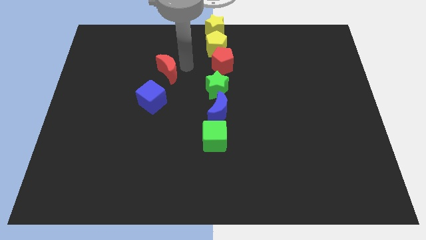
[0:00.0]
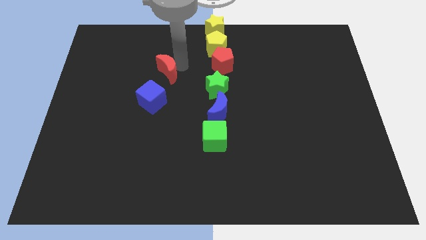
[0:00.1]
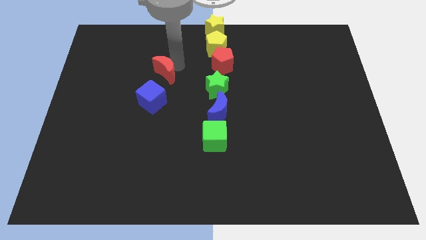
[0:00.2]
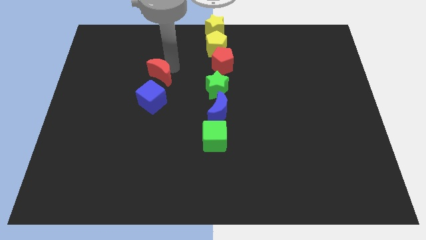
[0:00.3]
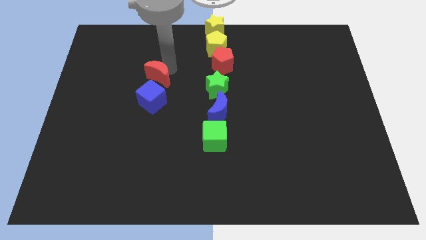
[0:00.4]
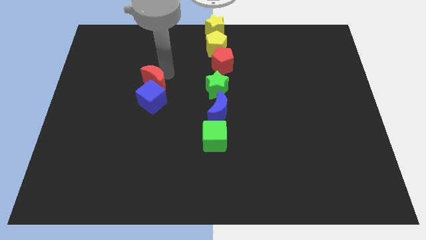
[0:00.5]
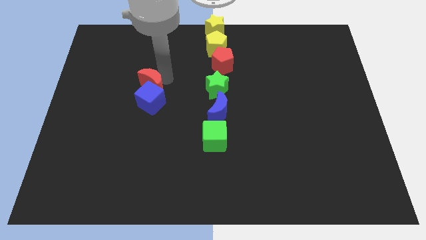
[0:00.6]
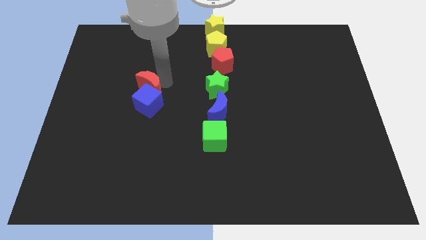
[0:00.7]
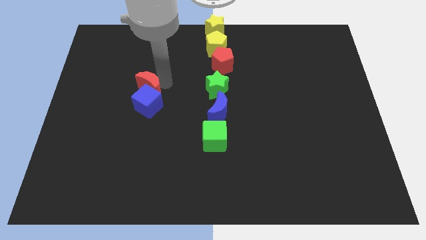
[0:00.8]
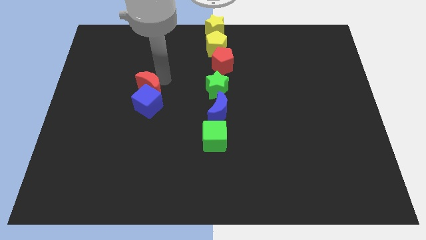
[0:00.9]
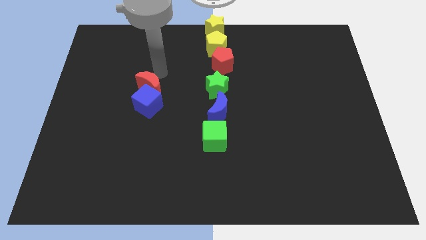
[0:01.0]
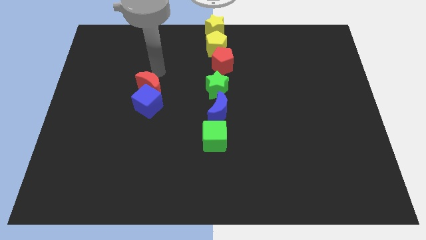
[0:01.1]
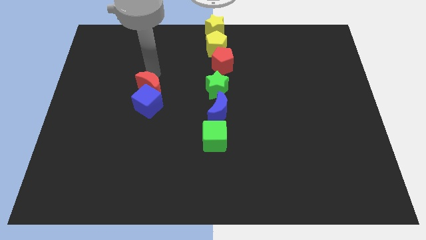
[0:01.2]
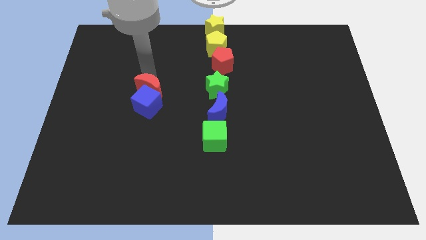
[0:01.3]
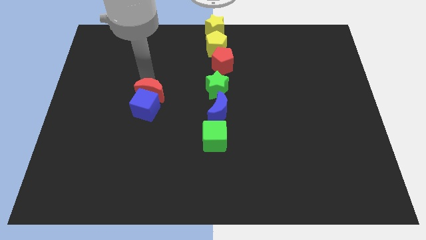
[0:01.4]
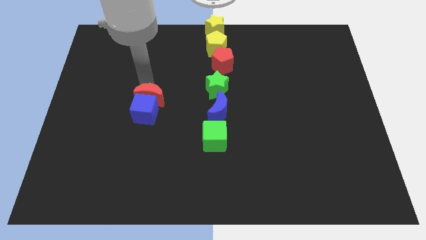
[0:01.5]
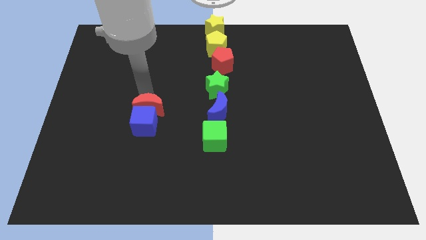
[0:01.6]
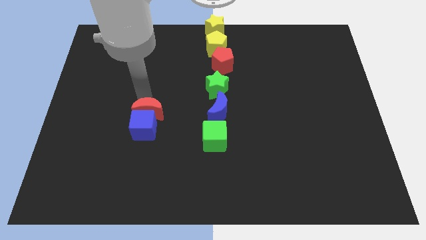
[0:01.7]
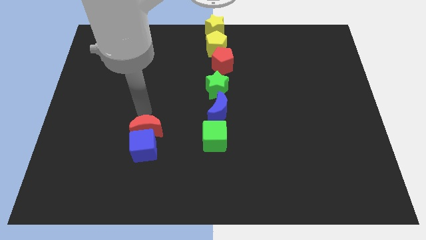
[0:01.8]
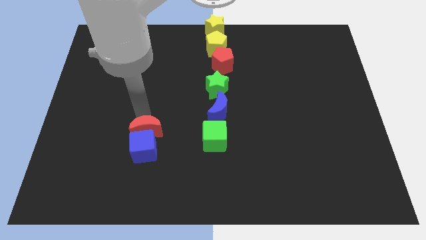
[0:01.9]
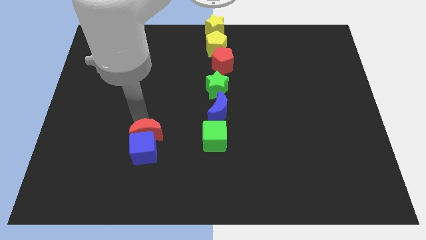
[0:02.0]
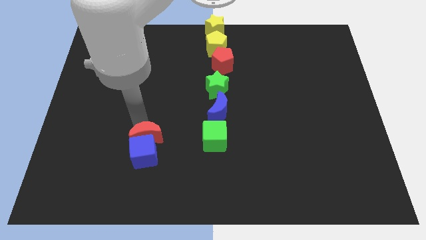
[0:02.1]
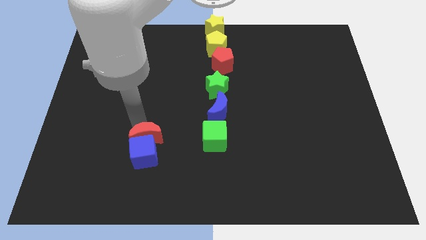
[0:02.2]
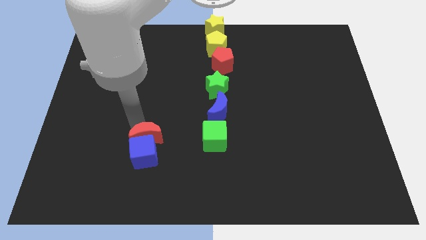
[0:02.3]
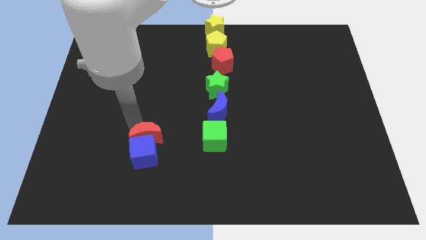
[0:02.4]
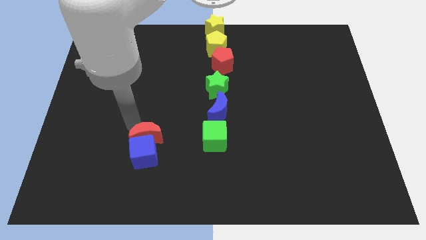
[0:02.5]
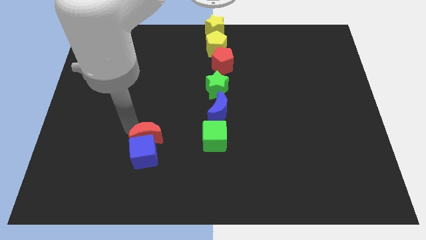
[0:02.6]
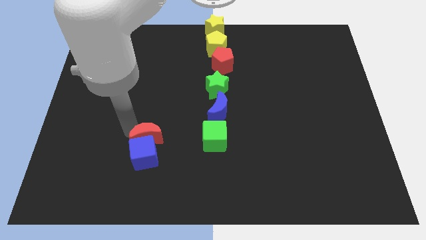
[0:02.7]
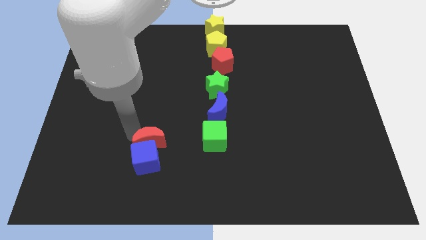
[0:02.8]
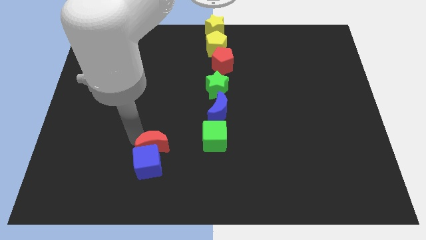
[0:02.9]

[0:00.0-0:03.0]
push red crescent and blue cube beside green cube

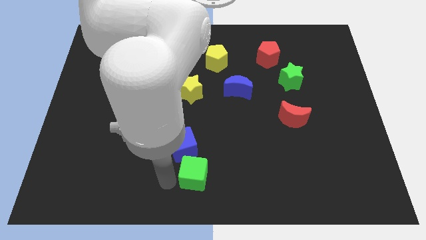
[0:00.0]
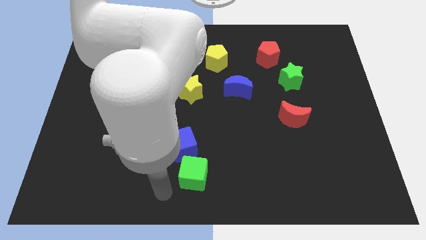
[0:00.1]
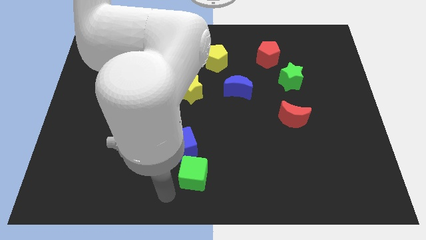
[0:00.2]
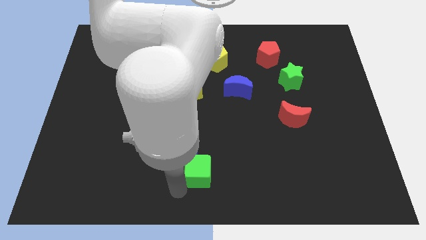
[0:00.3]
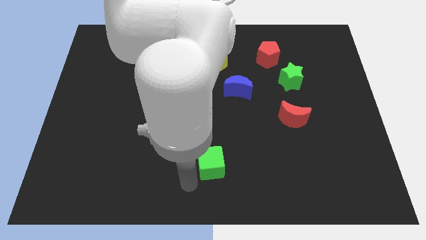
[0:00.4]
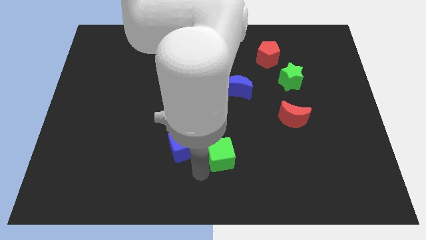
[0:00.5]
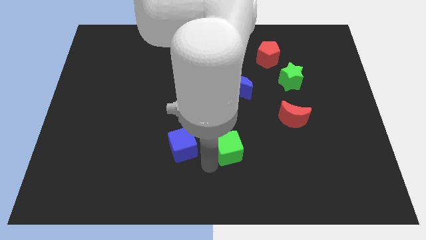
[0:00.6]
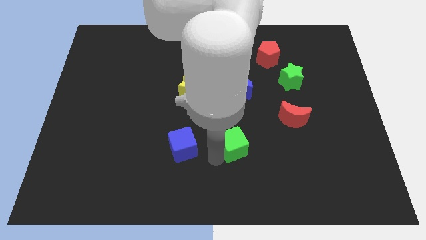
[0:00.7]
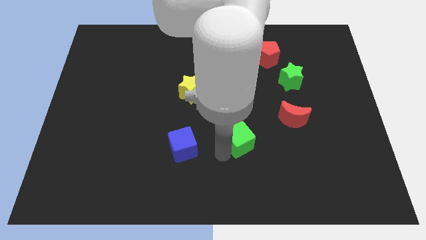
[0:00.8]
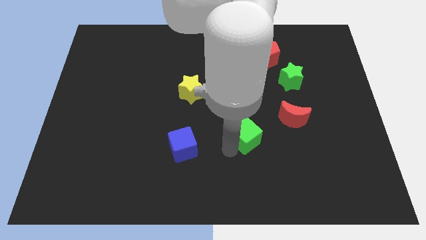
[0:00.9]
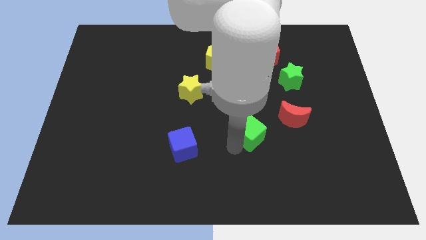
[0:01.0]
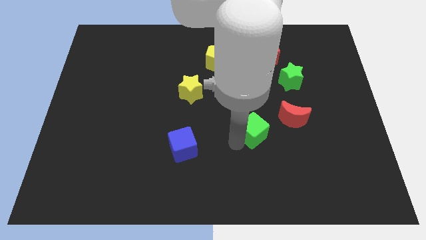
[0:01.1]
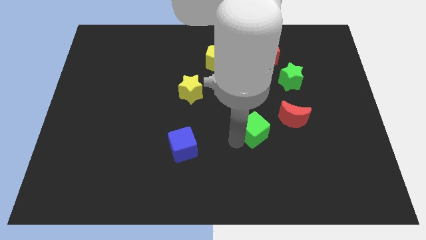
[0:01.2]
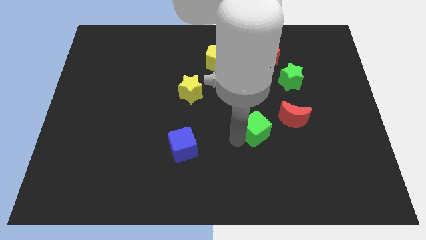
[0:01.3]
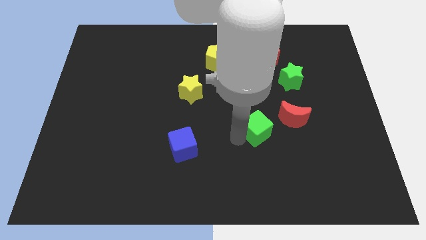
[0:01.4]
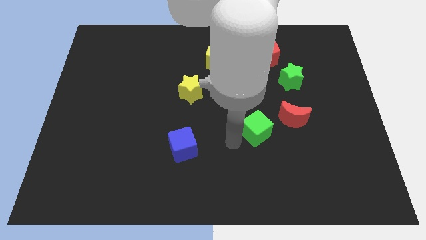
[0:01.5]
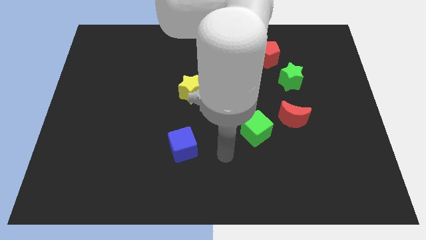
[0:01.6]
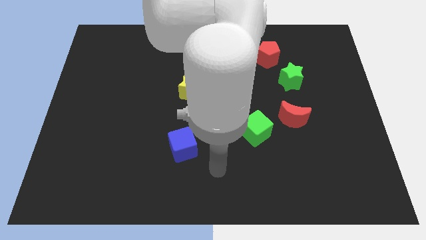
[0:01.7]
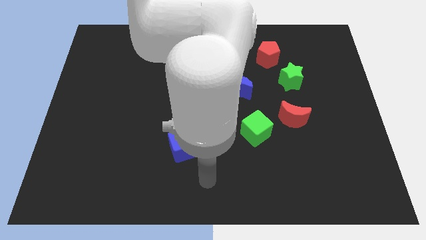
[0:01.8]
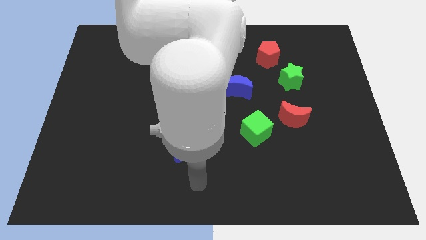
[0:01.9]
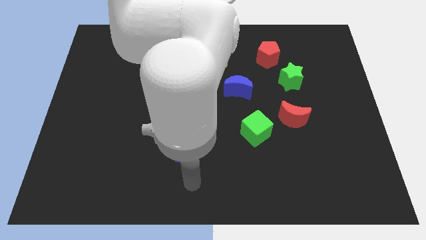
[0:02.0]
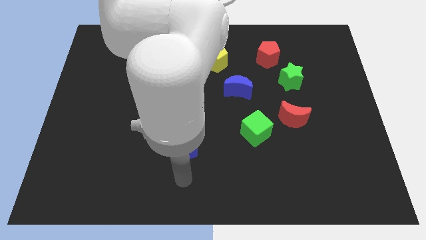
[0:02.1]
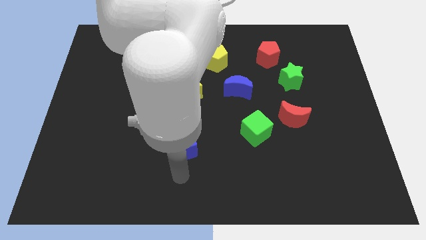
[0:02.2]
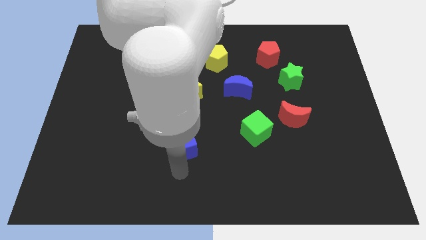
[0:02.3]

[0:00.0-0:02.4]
move the green cube in between the red crescent and blue cube

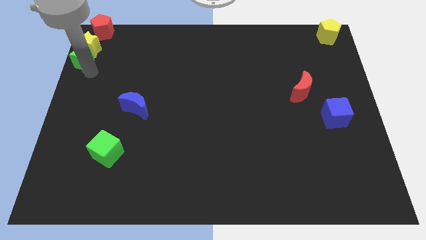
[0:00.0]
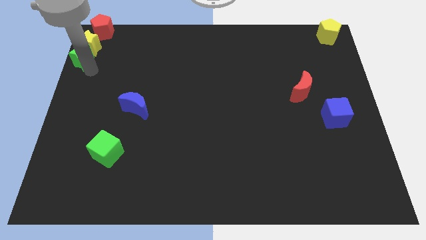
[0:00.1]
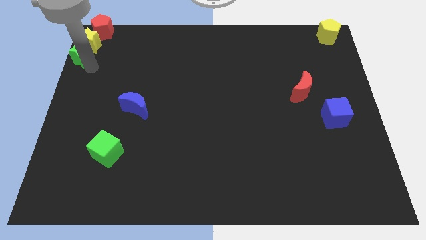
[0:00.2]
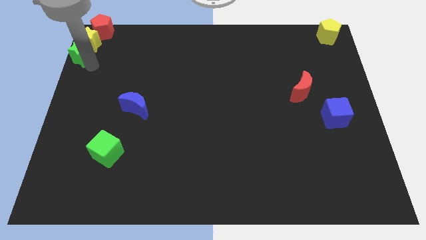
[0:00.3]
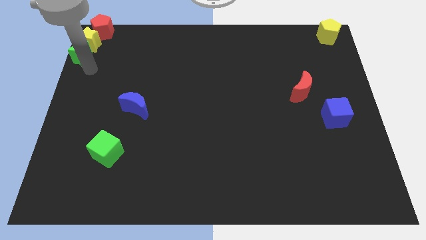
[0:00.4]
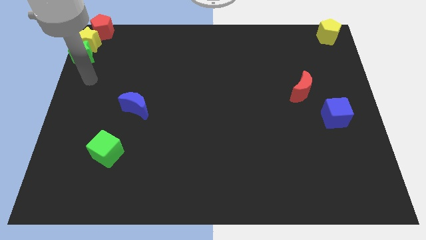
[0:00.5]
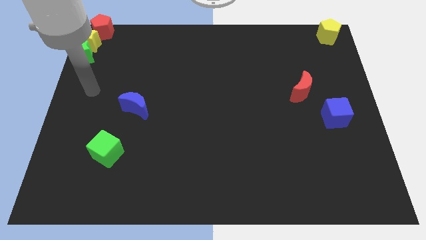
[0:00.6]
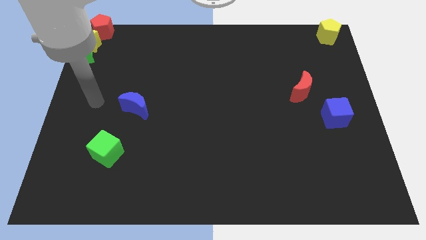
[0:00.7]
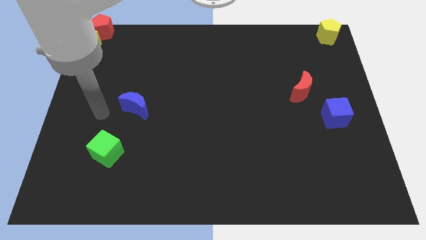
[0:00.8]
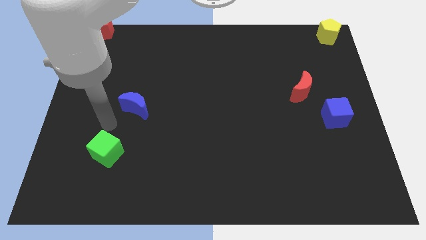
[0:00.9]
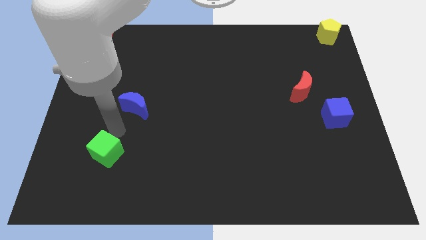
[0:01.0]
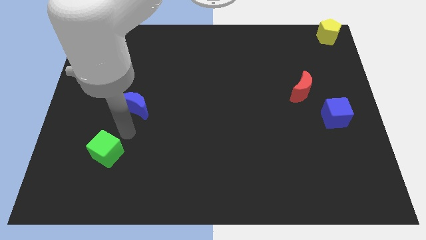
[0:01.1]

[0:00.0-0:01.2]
place the arm between the blue moon and green cube

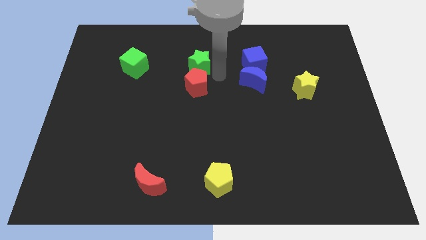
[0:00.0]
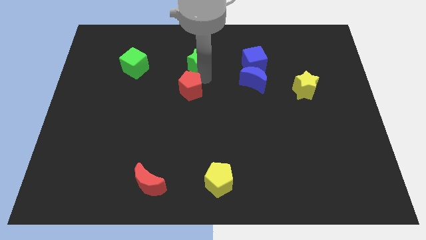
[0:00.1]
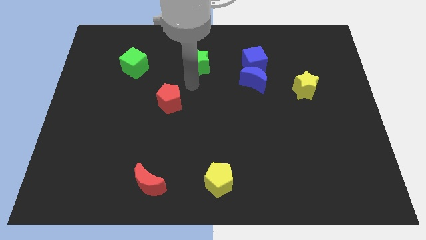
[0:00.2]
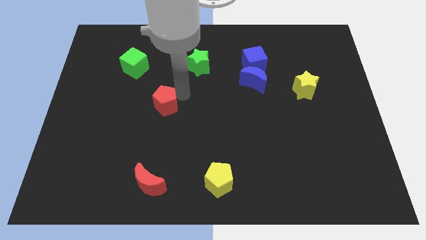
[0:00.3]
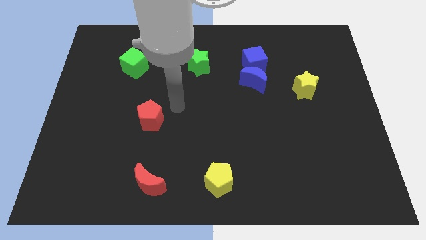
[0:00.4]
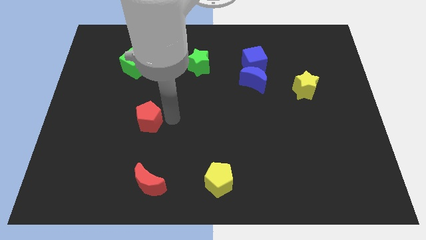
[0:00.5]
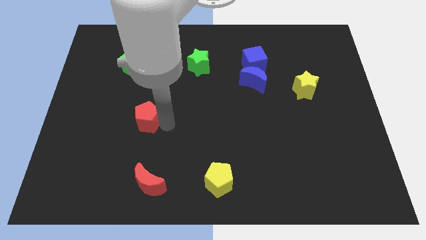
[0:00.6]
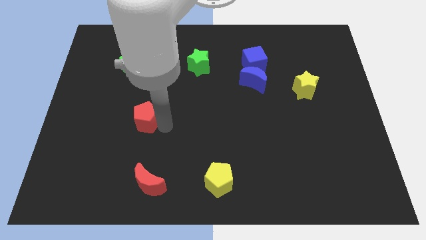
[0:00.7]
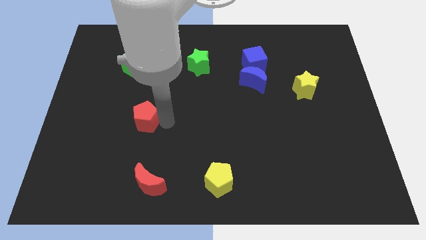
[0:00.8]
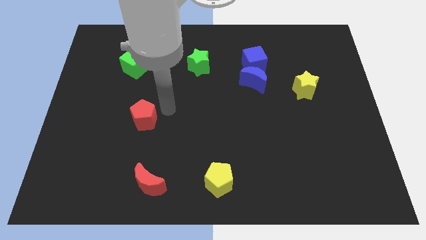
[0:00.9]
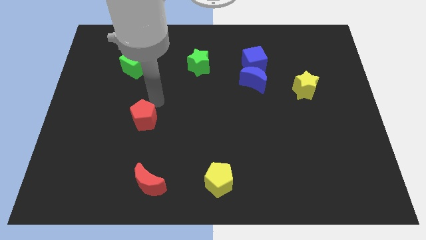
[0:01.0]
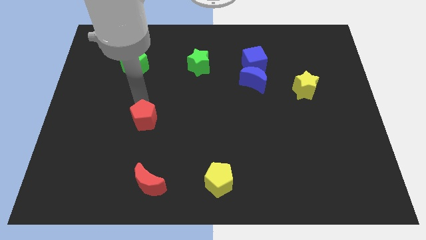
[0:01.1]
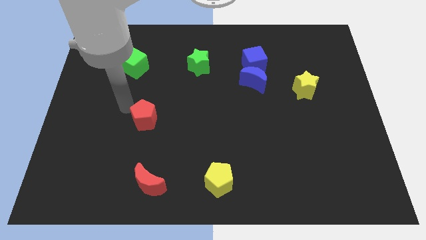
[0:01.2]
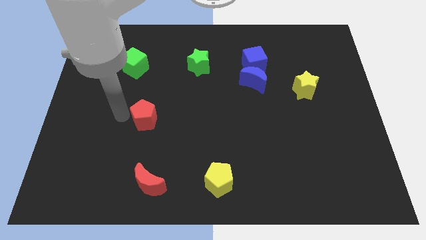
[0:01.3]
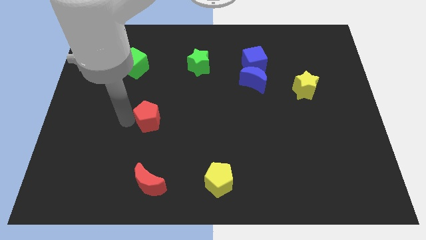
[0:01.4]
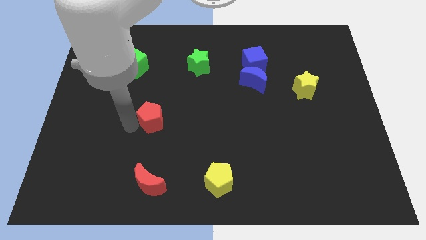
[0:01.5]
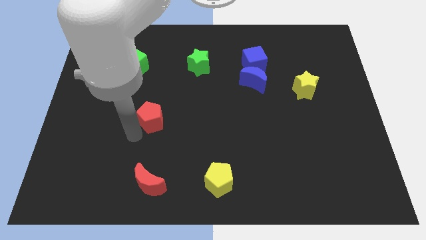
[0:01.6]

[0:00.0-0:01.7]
separate the red pentagon from the green star

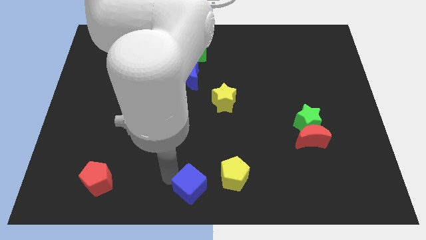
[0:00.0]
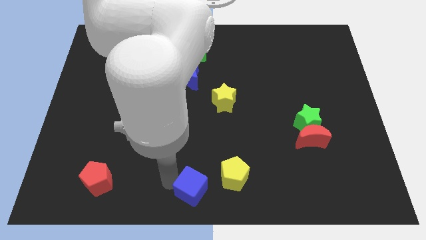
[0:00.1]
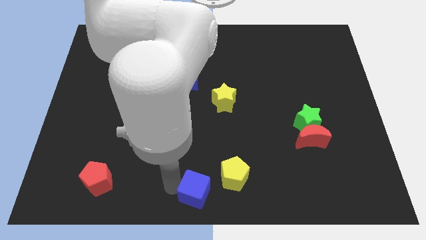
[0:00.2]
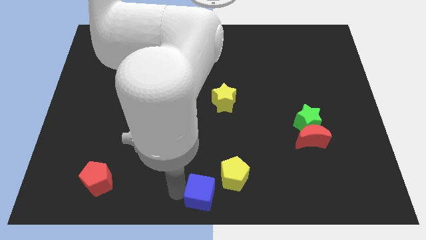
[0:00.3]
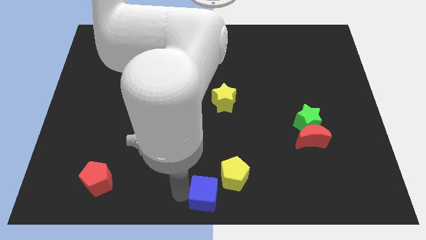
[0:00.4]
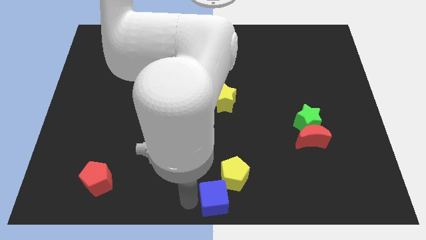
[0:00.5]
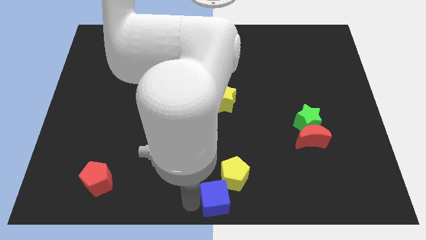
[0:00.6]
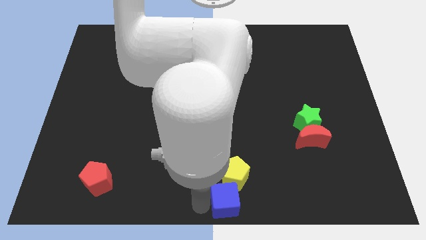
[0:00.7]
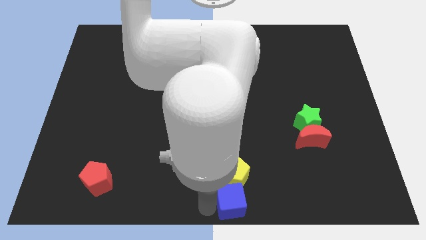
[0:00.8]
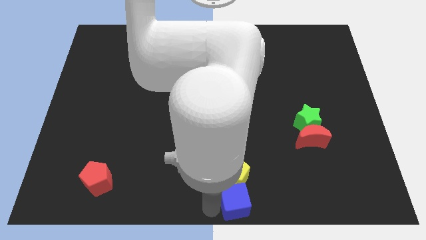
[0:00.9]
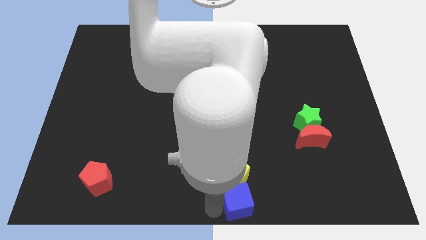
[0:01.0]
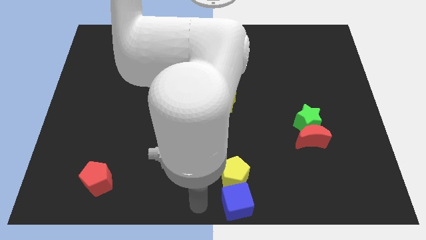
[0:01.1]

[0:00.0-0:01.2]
move the blue cube to the bottom of the yellow pentagon
